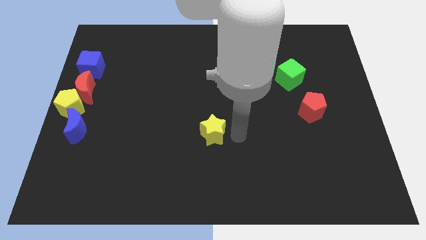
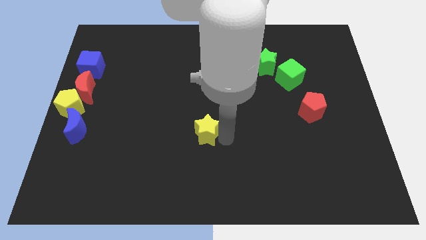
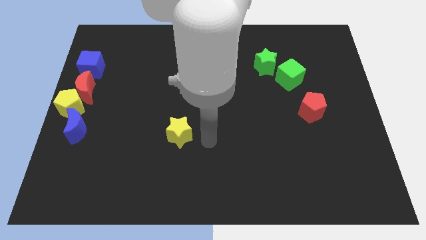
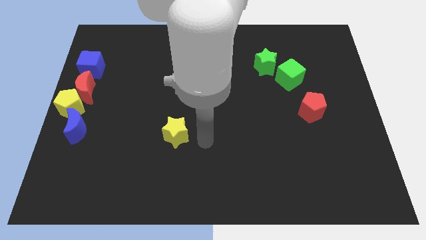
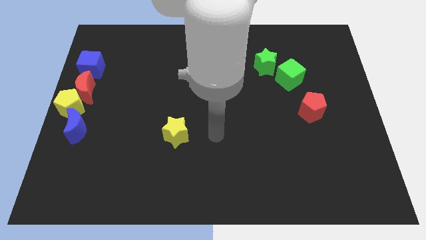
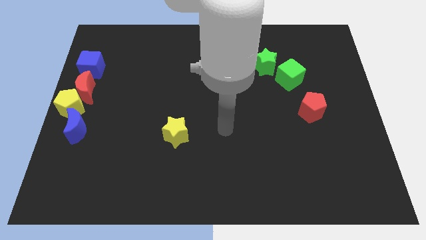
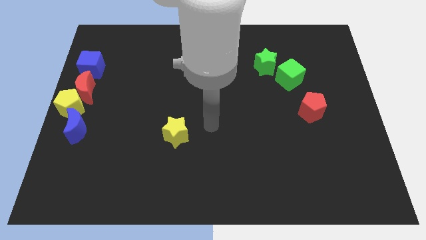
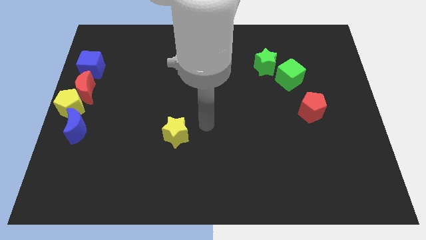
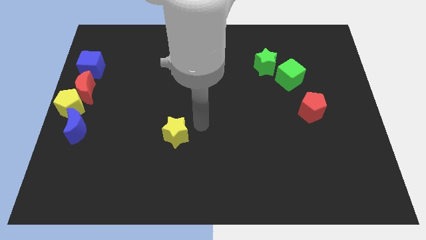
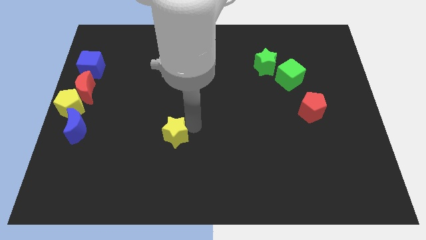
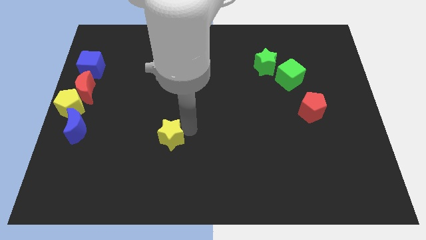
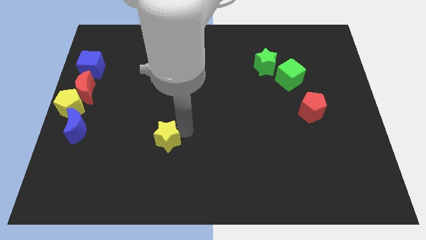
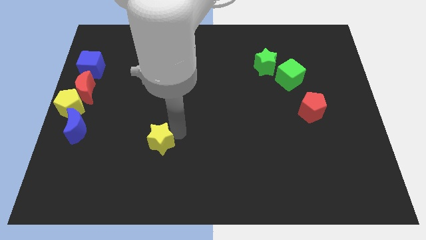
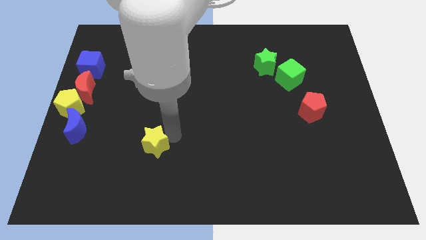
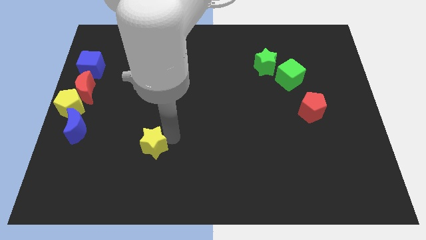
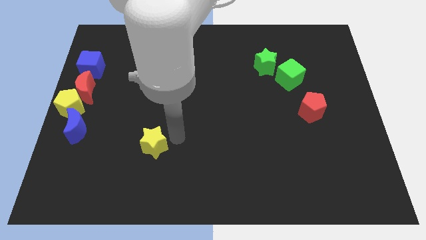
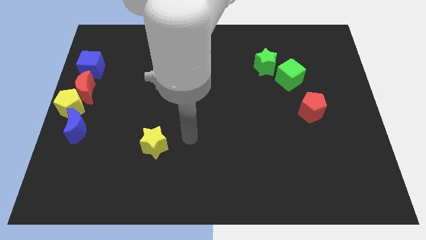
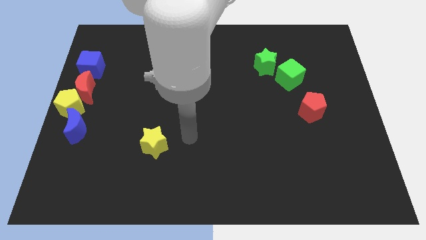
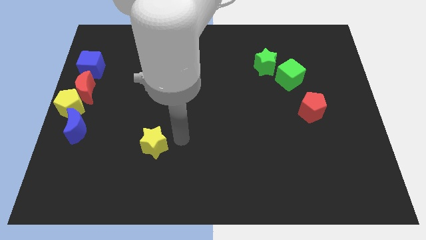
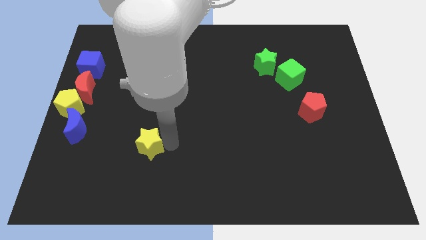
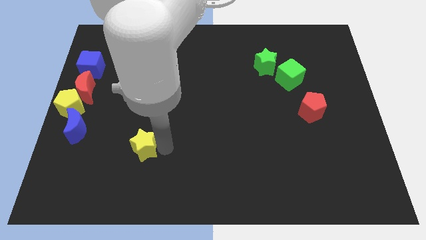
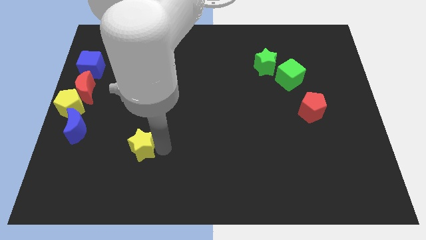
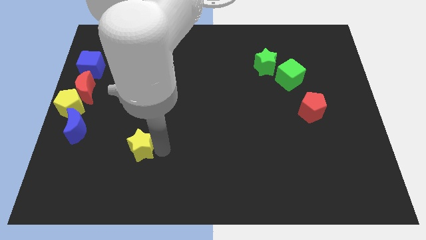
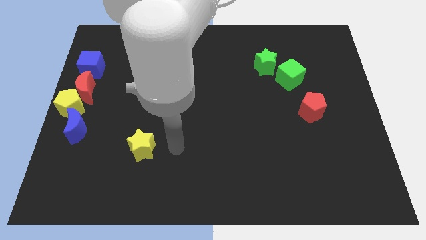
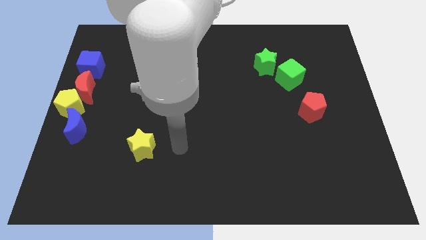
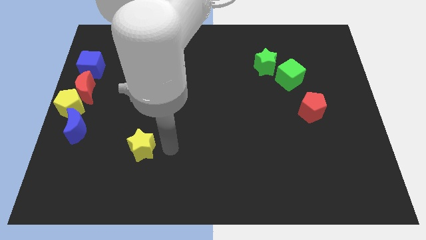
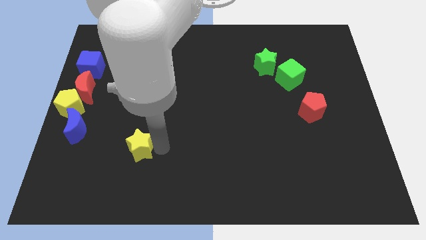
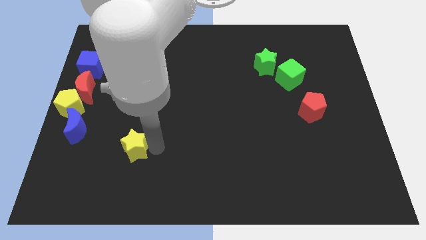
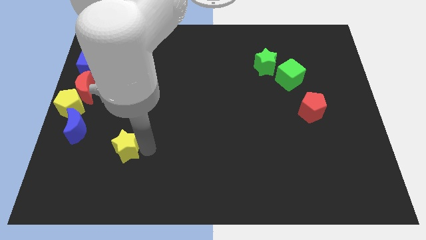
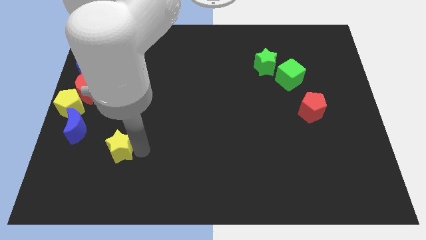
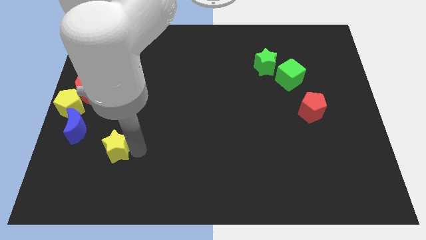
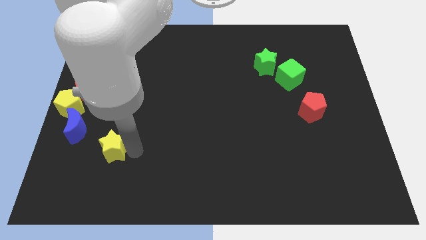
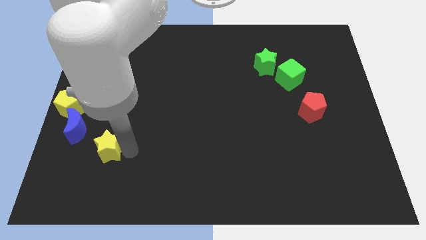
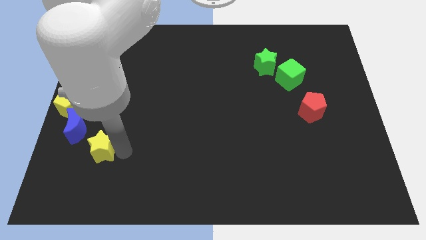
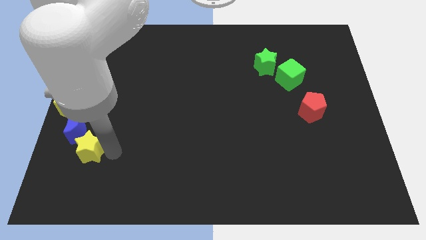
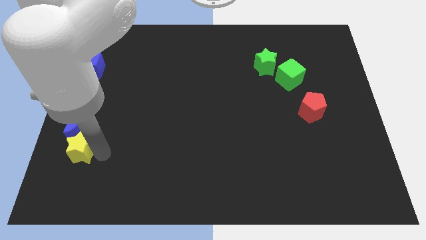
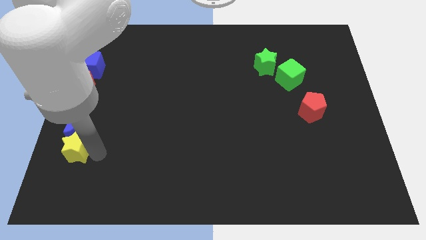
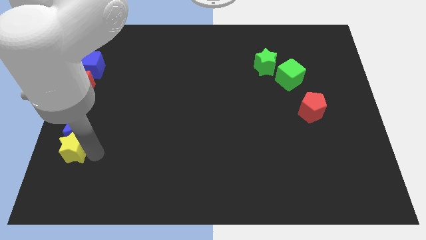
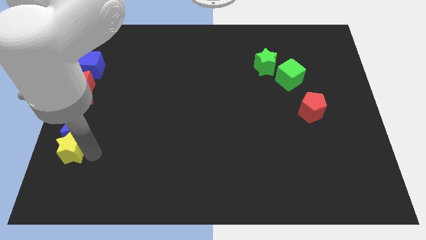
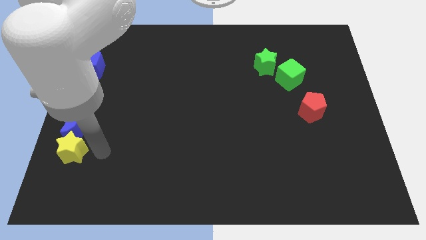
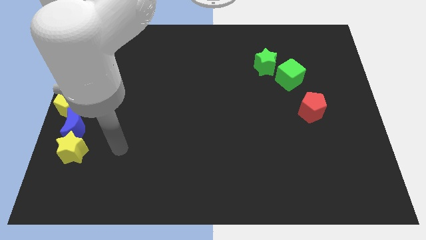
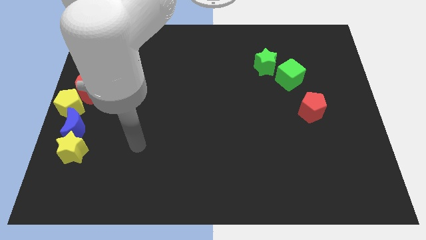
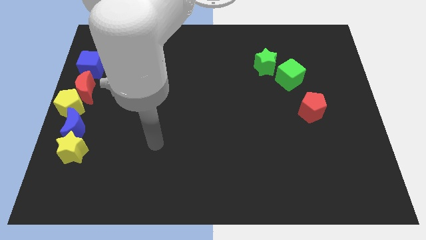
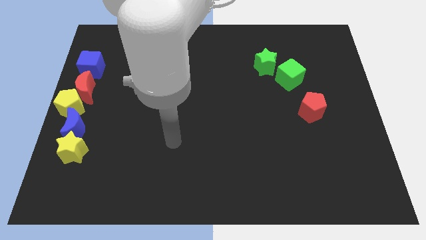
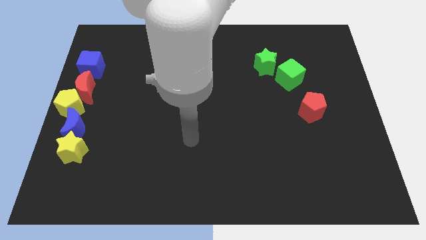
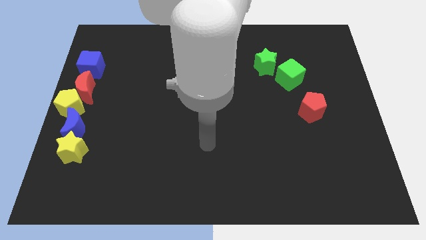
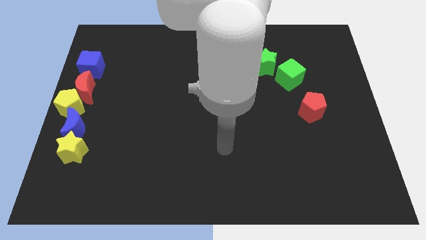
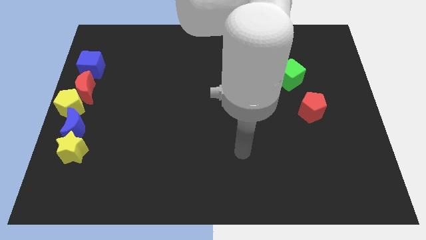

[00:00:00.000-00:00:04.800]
move the yellow star below the blue crescent

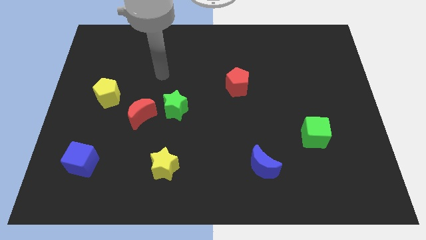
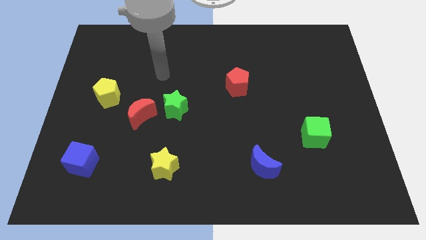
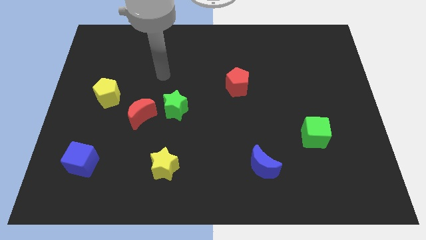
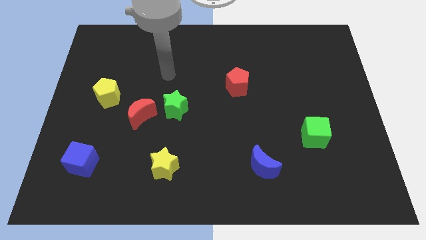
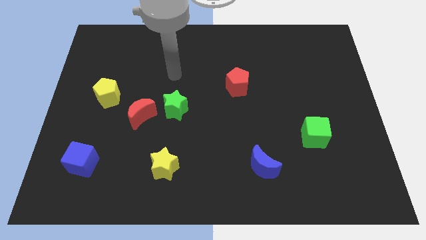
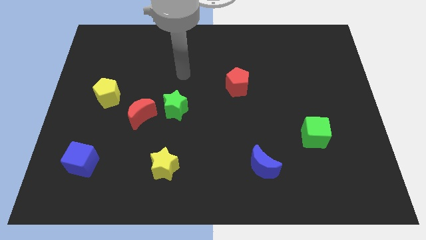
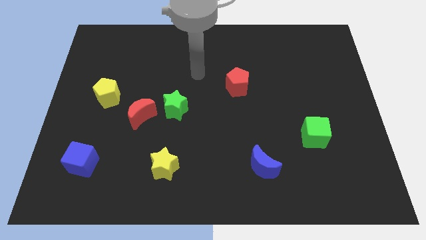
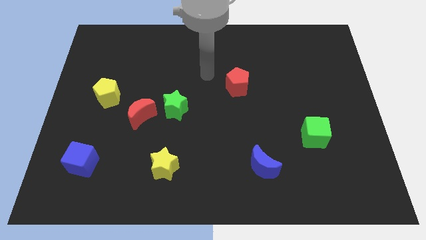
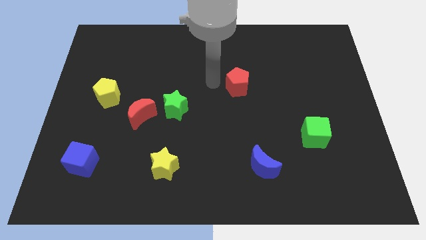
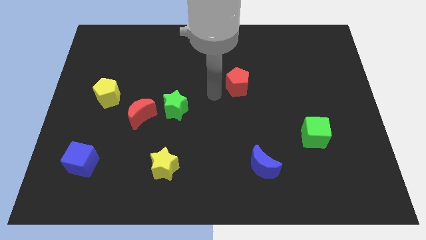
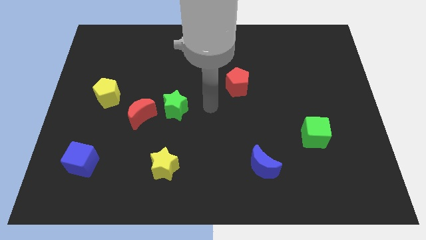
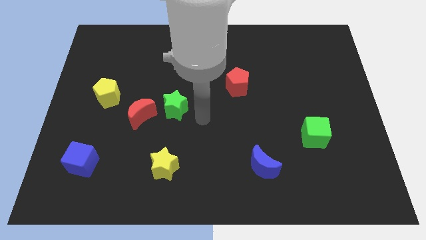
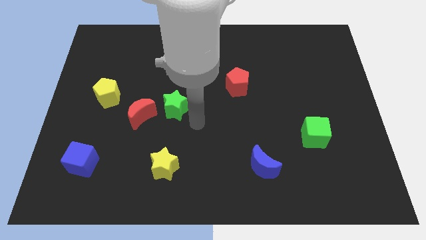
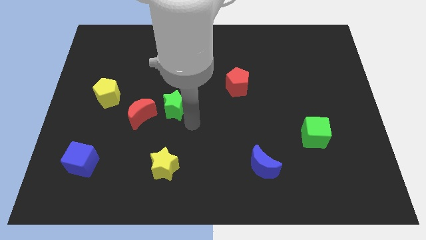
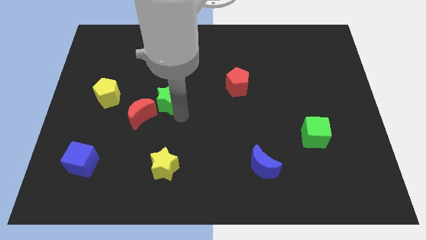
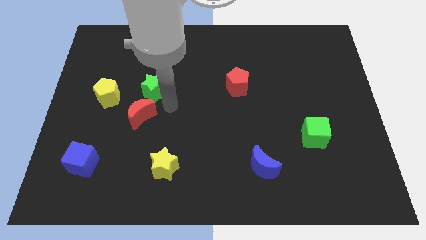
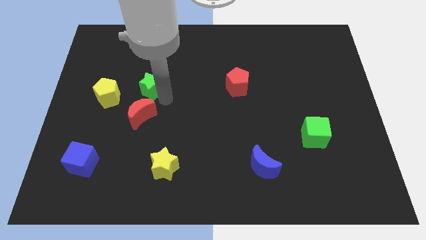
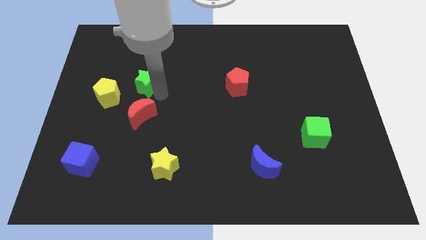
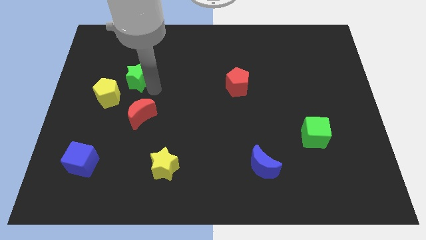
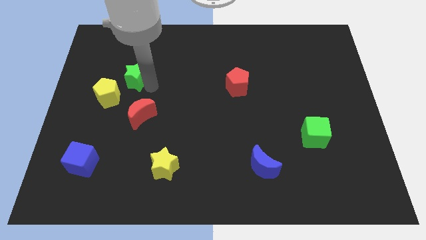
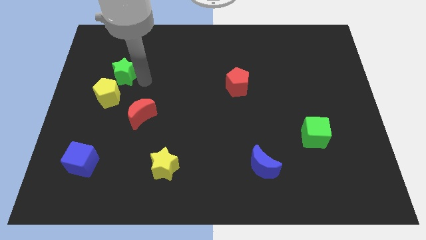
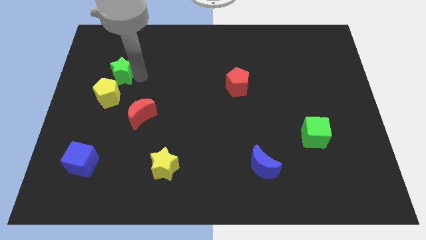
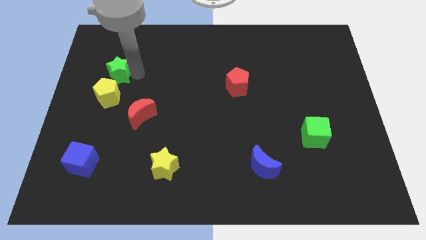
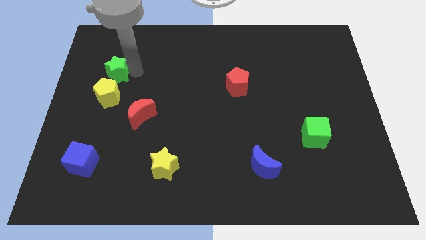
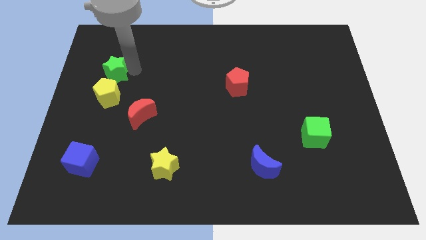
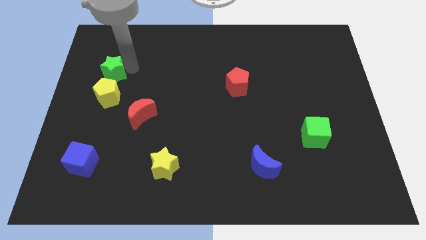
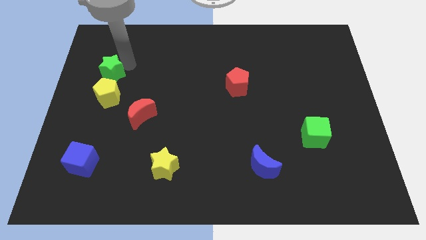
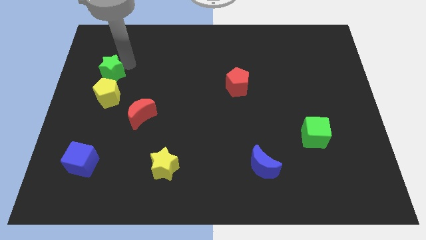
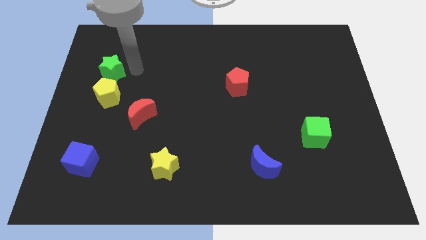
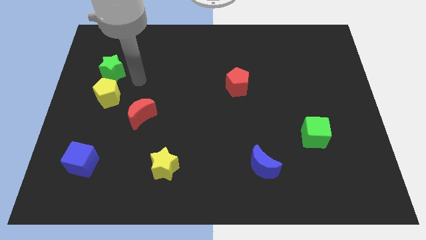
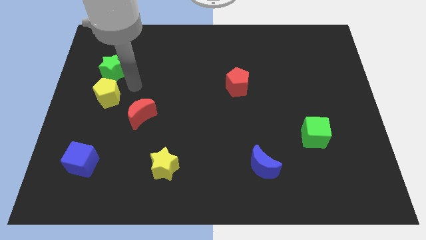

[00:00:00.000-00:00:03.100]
put the green star diagonally top left to the yellow star

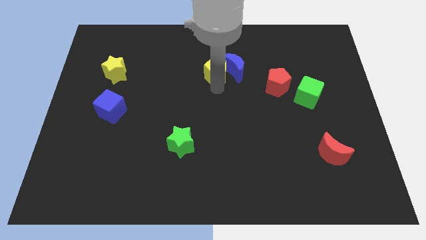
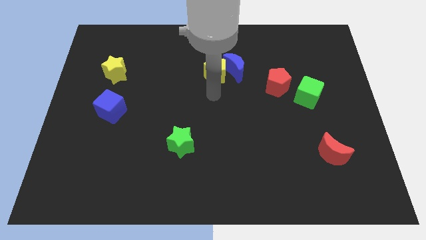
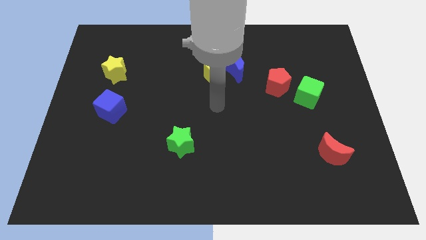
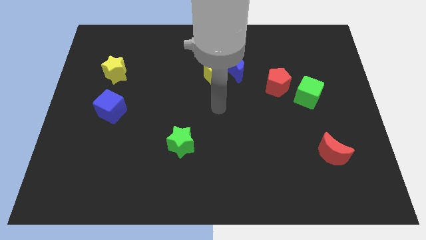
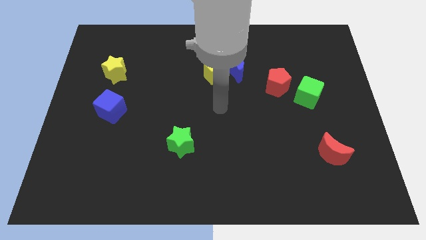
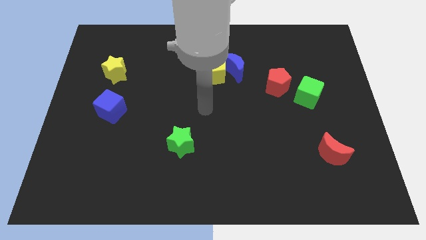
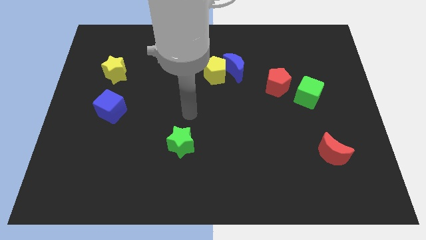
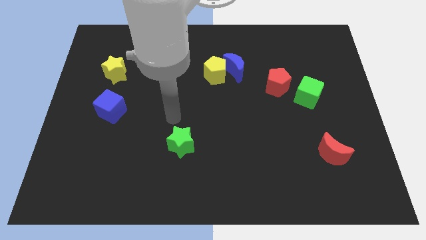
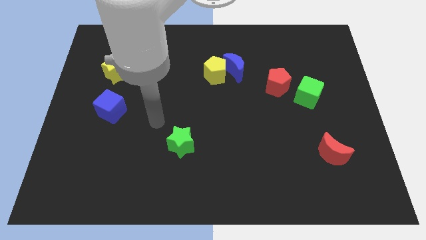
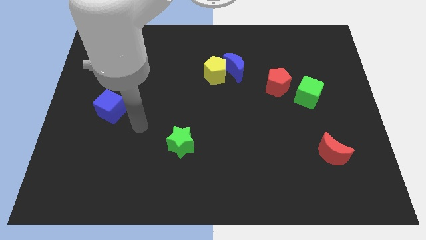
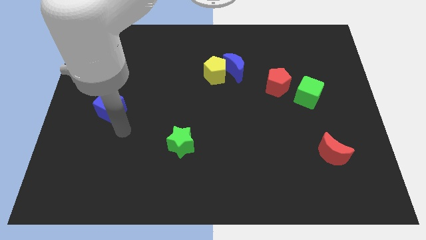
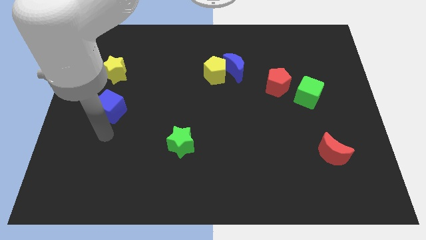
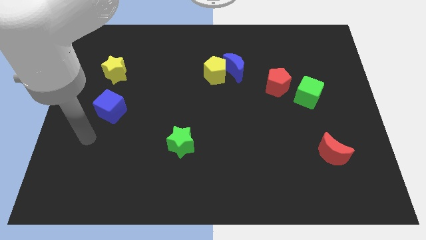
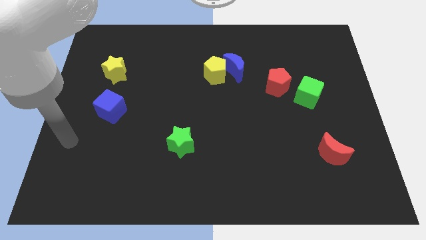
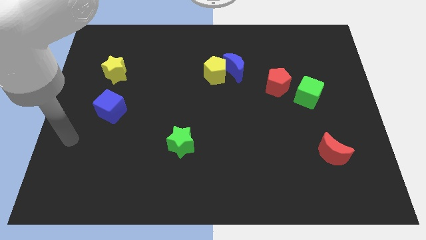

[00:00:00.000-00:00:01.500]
move your arm away from the yellow pentagon
